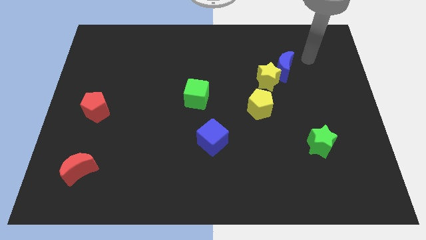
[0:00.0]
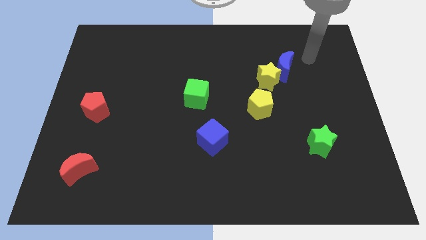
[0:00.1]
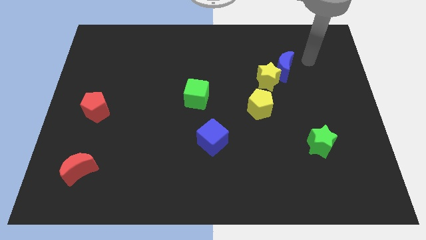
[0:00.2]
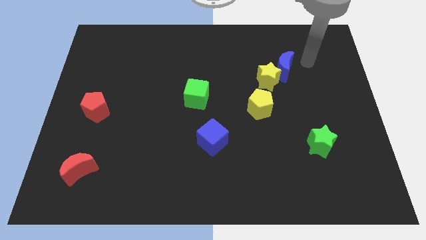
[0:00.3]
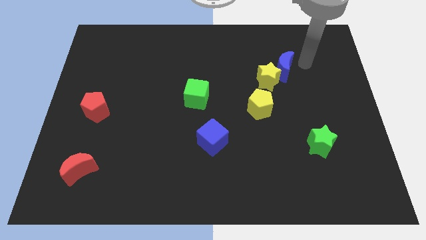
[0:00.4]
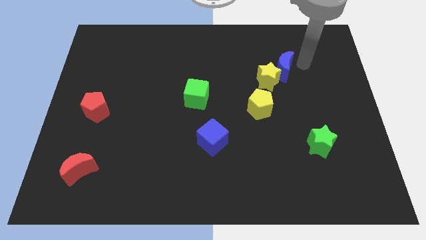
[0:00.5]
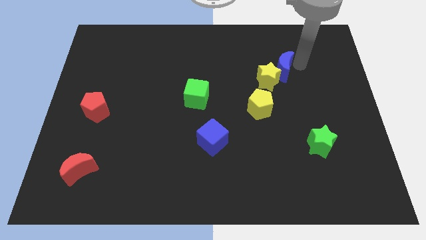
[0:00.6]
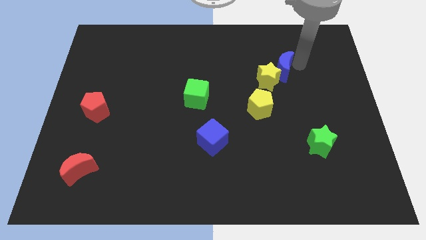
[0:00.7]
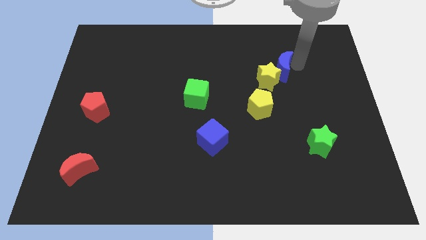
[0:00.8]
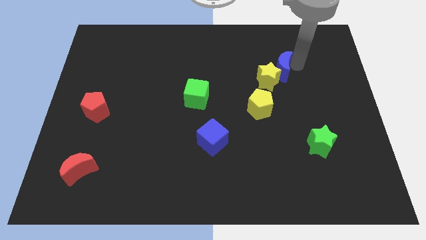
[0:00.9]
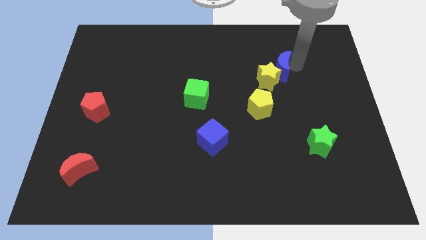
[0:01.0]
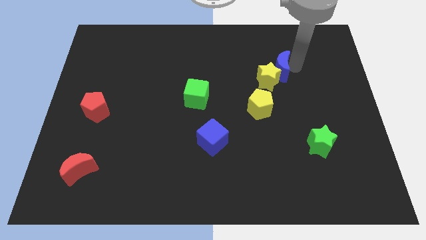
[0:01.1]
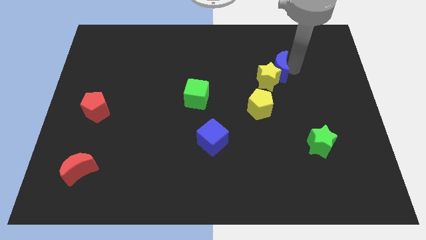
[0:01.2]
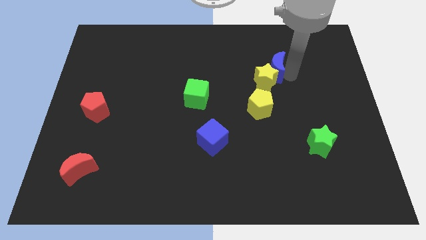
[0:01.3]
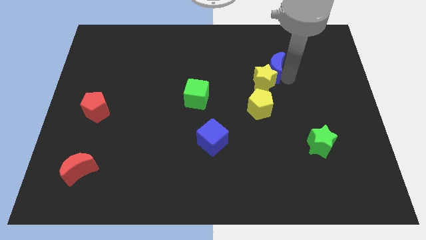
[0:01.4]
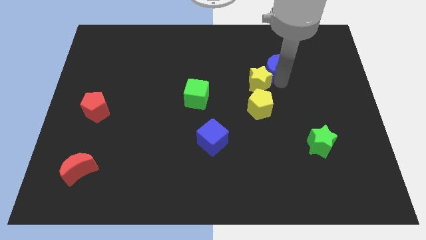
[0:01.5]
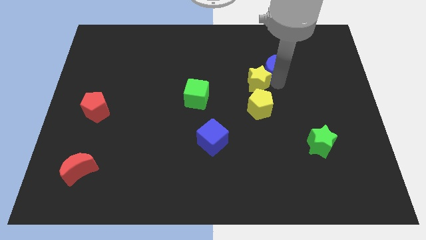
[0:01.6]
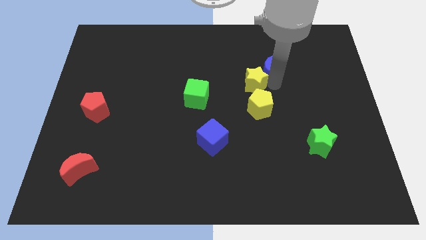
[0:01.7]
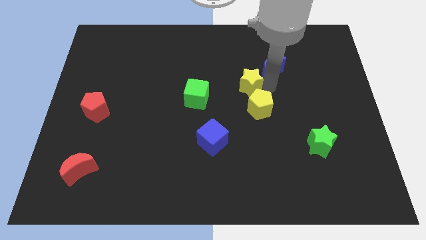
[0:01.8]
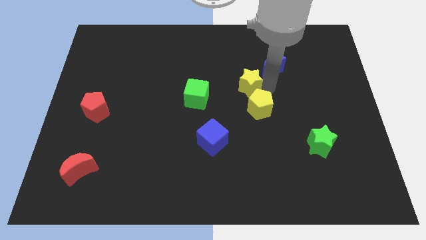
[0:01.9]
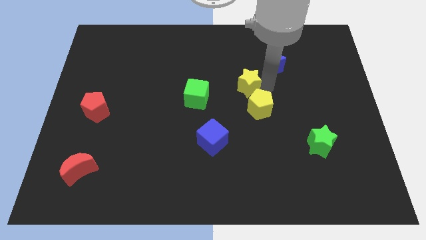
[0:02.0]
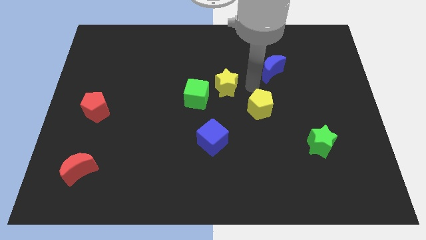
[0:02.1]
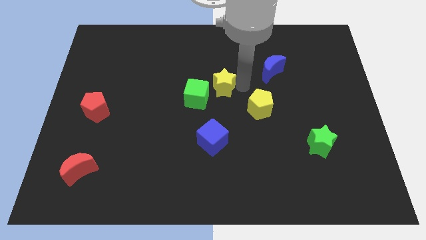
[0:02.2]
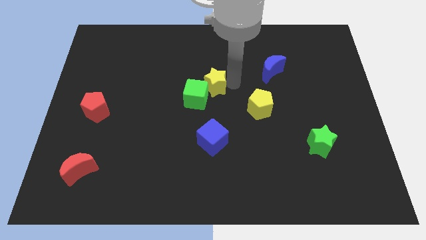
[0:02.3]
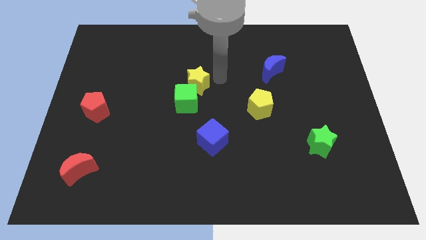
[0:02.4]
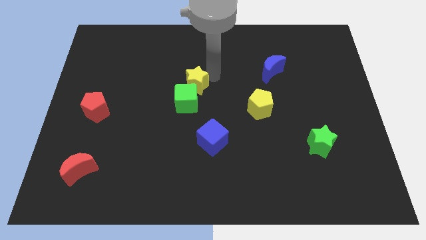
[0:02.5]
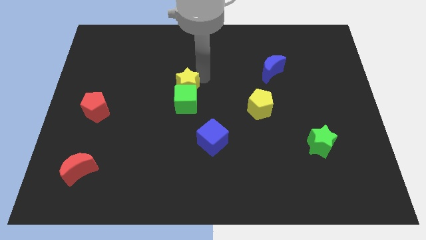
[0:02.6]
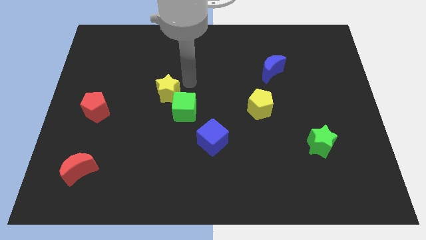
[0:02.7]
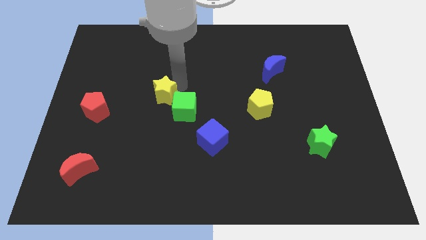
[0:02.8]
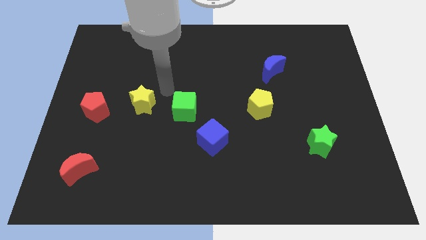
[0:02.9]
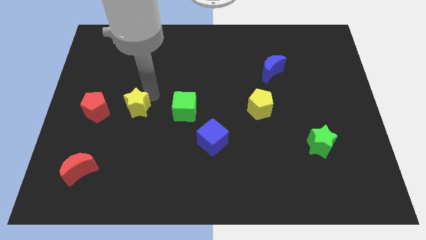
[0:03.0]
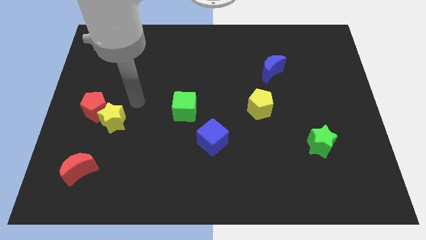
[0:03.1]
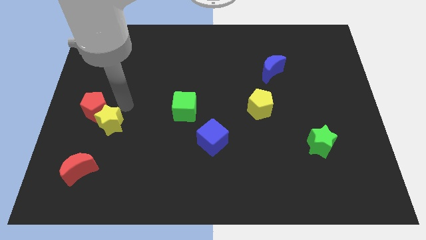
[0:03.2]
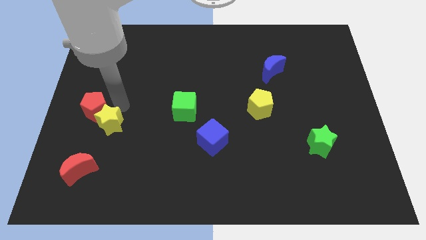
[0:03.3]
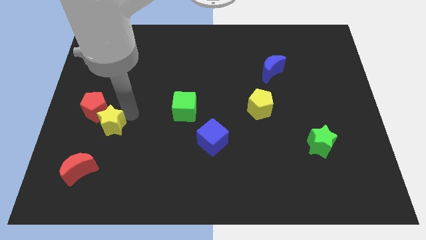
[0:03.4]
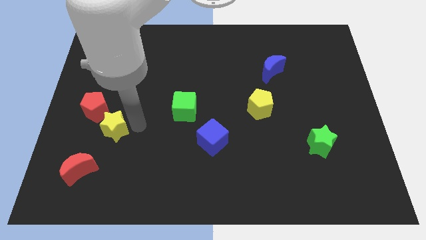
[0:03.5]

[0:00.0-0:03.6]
slide the yellow star diagonally bottom right to the red pentagon

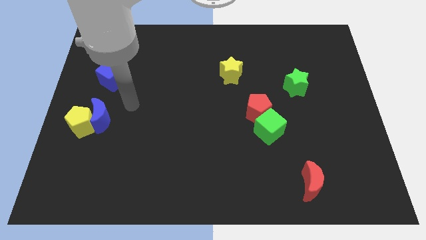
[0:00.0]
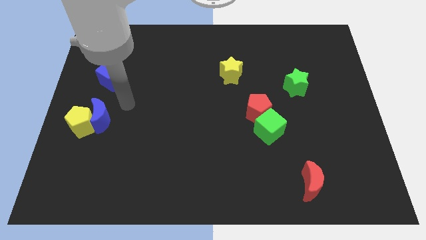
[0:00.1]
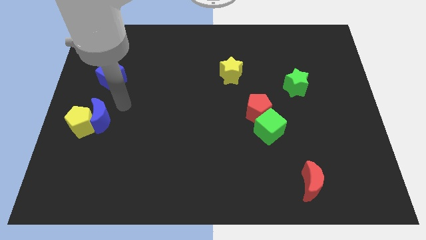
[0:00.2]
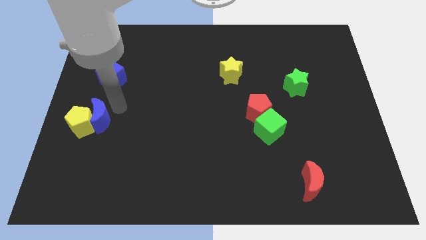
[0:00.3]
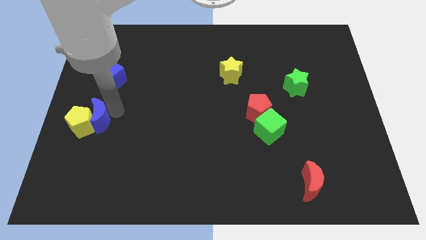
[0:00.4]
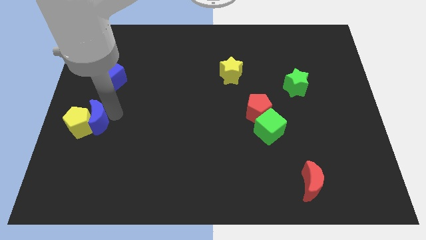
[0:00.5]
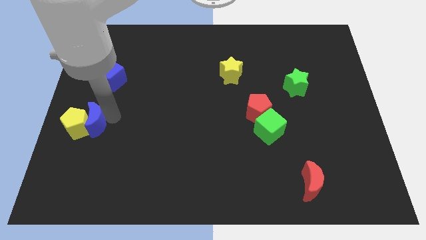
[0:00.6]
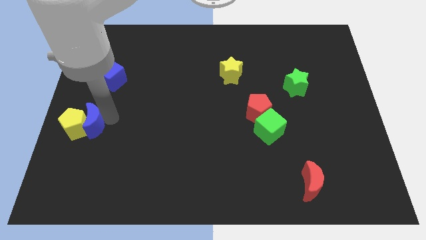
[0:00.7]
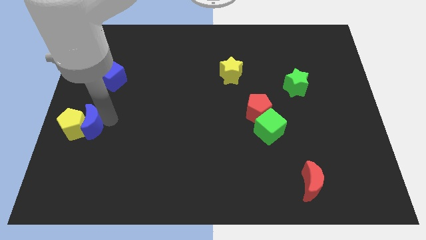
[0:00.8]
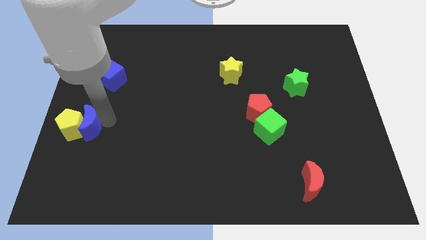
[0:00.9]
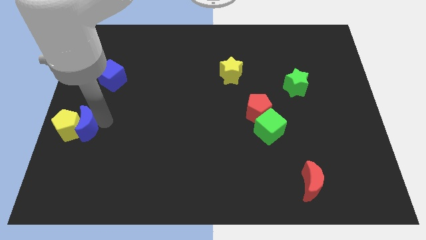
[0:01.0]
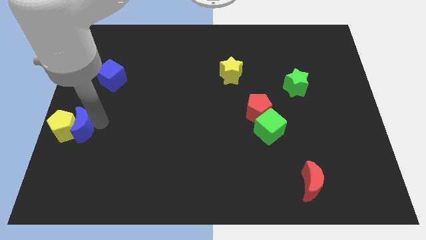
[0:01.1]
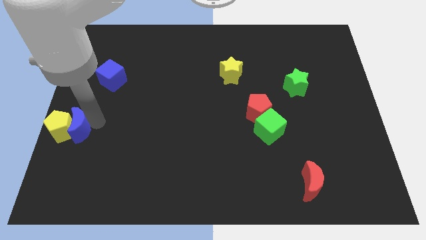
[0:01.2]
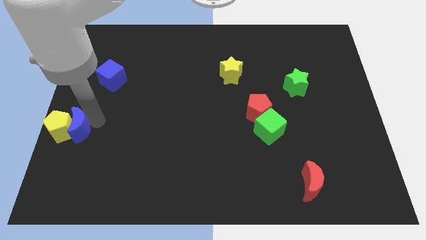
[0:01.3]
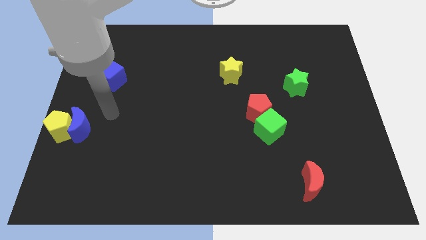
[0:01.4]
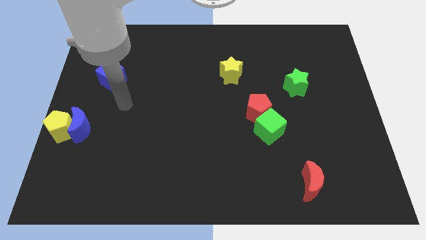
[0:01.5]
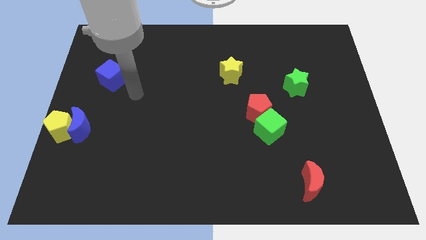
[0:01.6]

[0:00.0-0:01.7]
move the yellow pentagon and blue crescent to the left side of the board

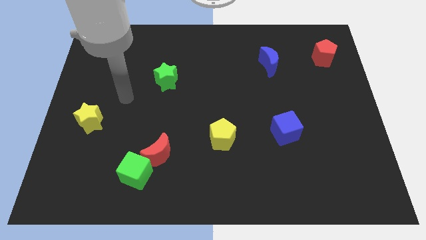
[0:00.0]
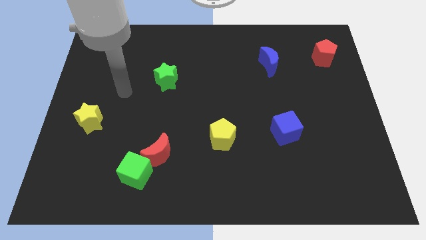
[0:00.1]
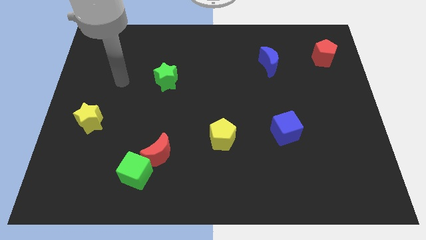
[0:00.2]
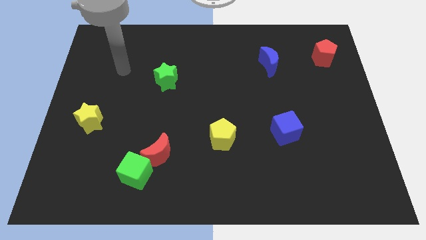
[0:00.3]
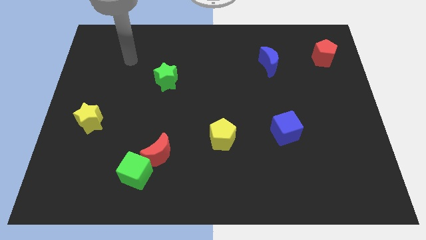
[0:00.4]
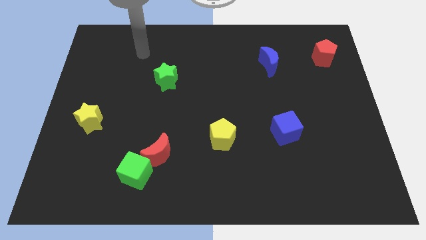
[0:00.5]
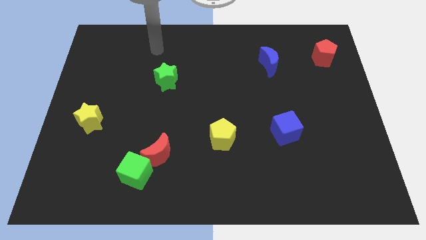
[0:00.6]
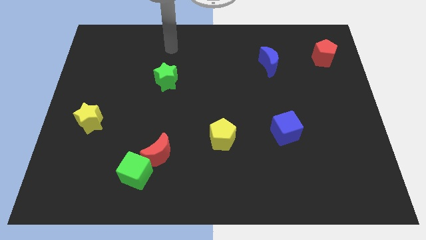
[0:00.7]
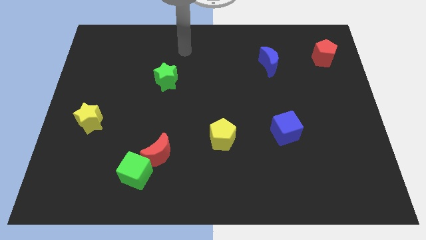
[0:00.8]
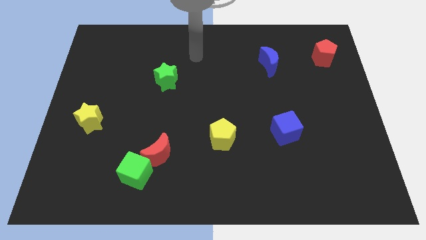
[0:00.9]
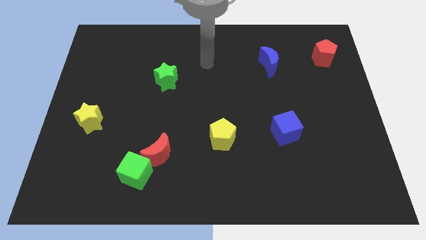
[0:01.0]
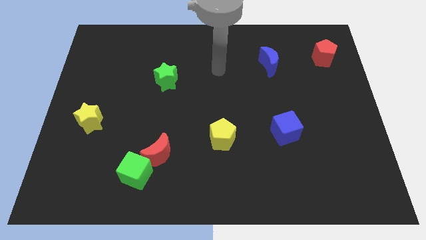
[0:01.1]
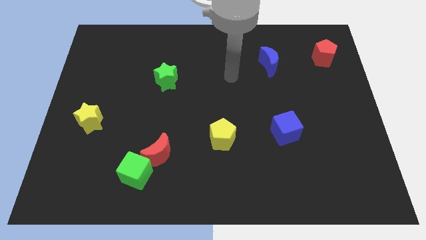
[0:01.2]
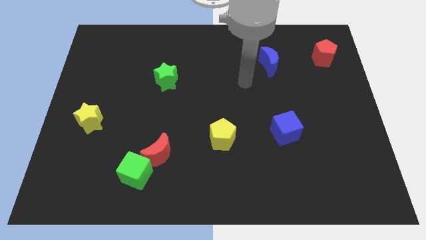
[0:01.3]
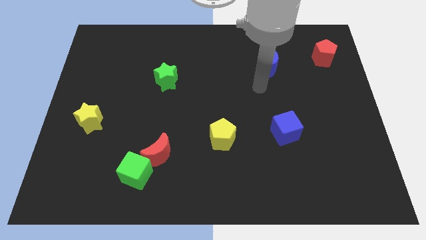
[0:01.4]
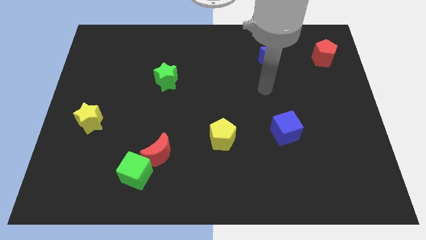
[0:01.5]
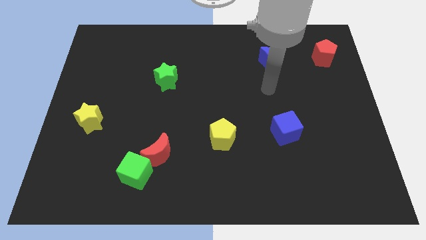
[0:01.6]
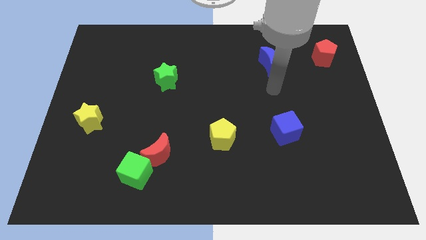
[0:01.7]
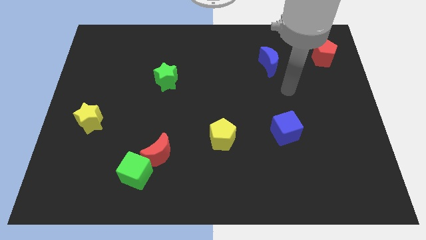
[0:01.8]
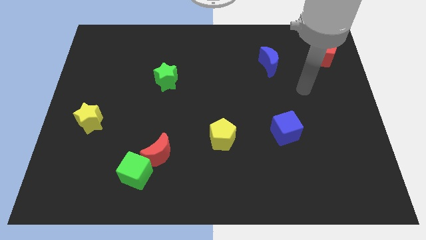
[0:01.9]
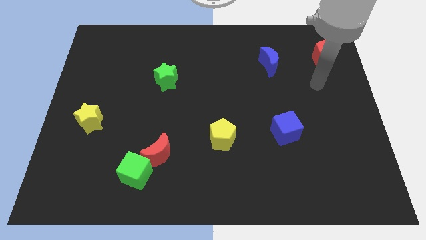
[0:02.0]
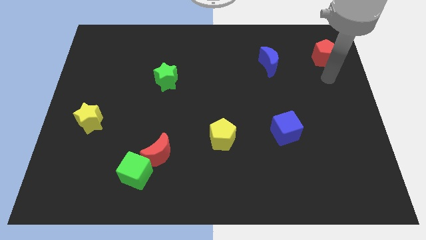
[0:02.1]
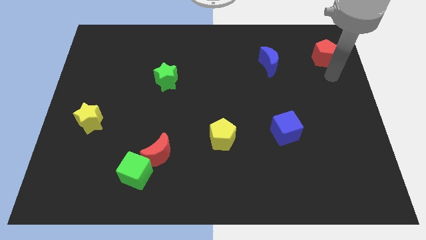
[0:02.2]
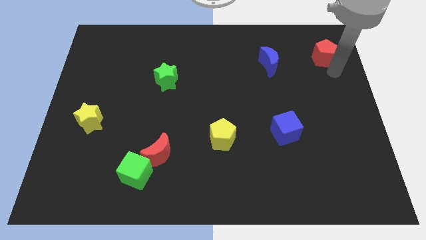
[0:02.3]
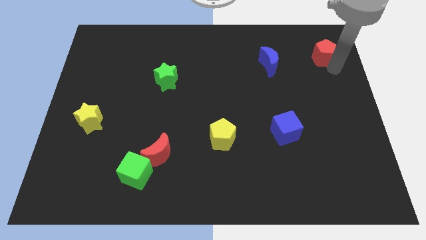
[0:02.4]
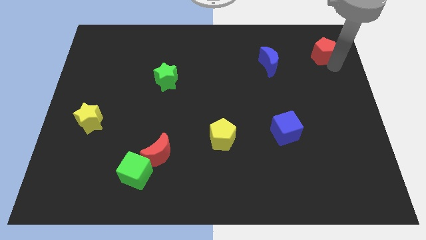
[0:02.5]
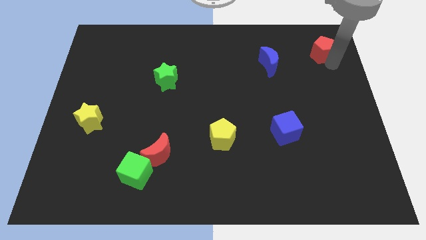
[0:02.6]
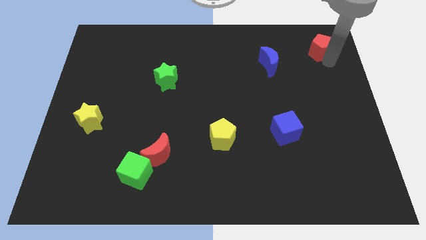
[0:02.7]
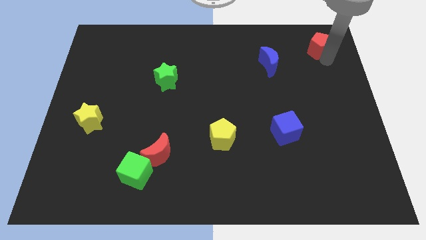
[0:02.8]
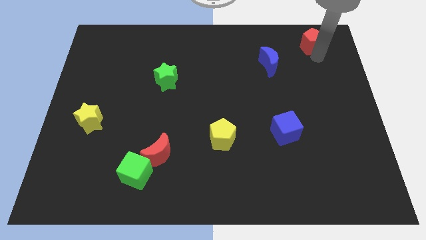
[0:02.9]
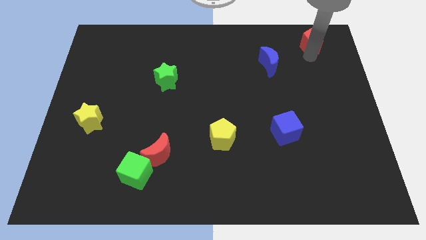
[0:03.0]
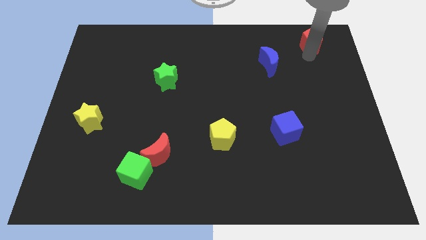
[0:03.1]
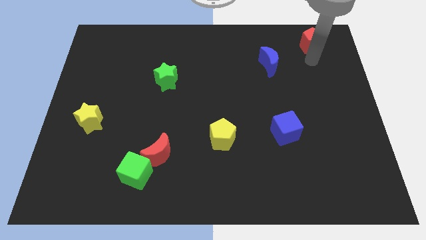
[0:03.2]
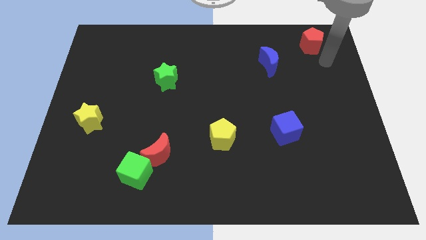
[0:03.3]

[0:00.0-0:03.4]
go and push the red pentagon towards the top

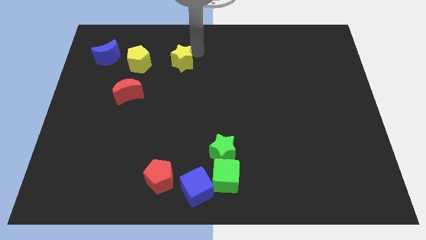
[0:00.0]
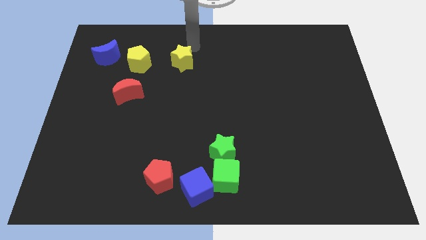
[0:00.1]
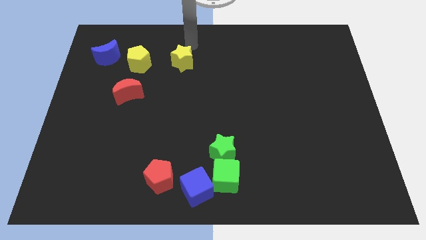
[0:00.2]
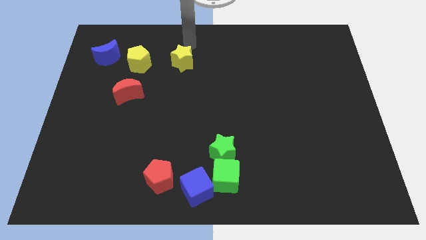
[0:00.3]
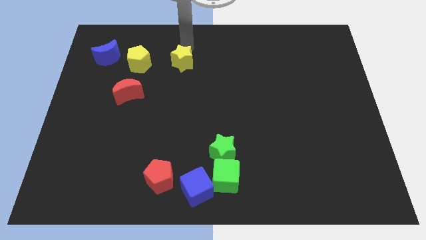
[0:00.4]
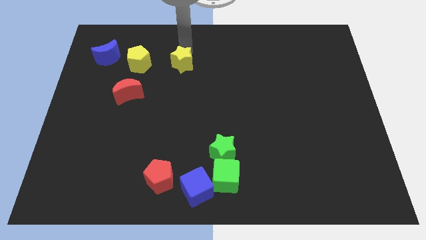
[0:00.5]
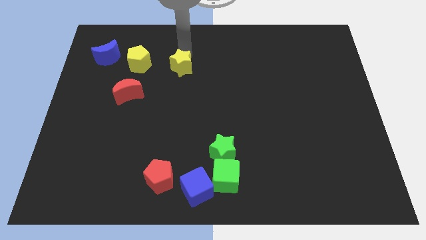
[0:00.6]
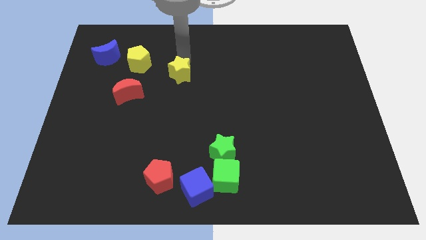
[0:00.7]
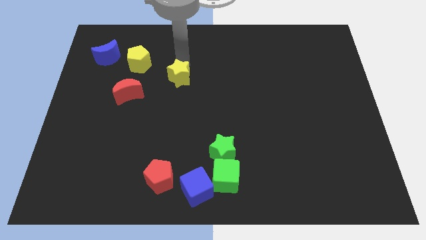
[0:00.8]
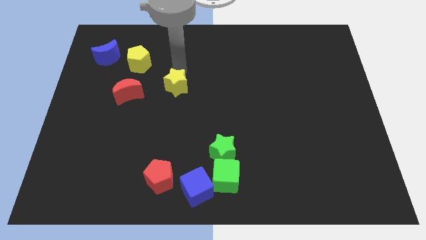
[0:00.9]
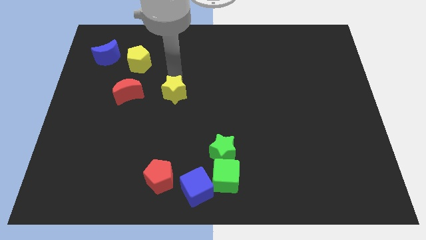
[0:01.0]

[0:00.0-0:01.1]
make a triangle by moving the yellow star
